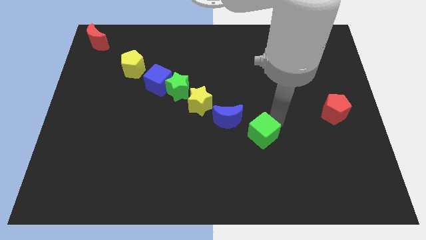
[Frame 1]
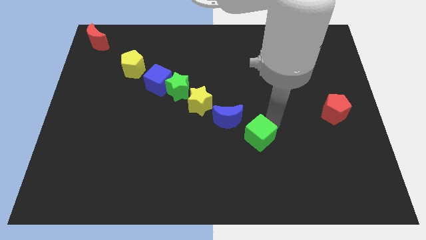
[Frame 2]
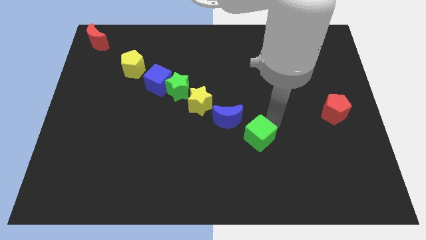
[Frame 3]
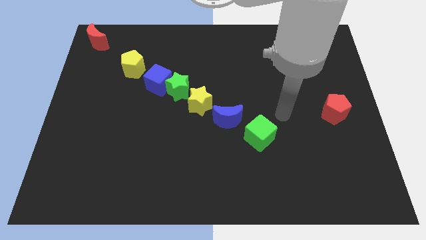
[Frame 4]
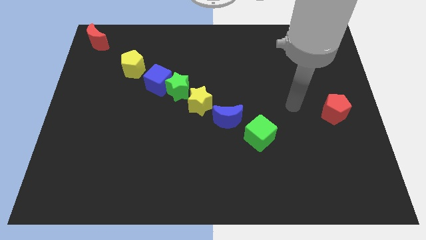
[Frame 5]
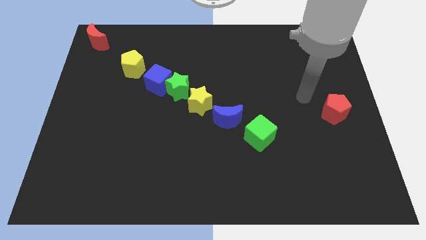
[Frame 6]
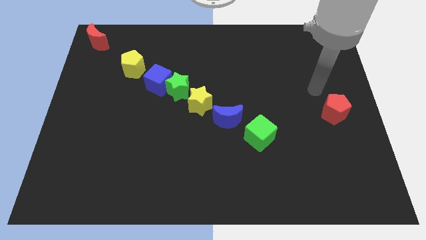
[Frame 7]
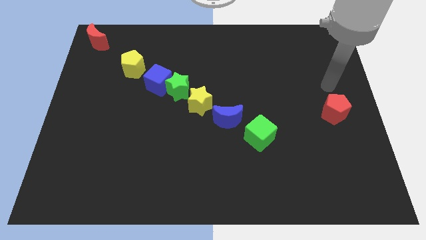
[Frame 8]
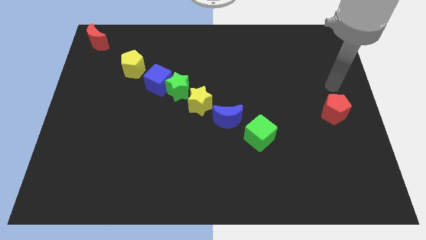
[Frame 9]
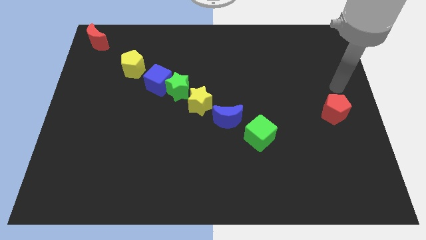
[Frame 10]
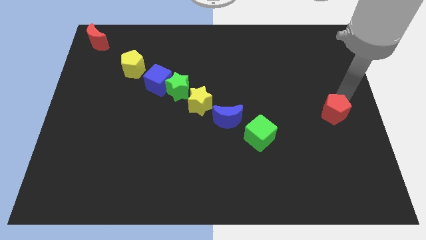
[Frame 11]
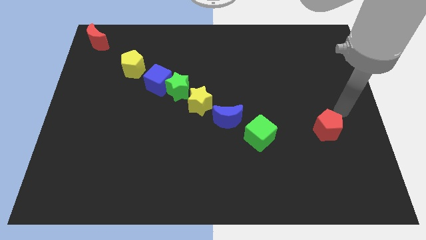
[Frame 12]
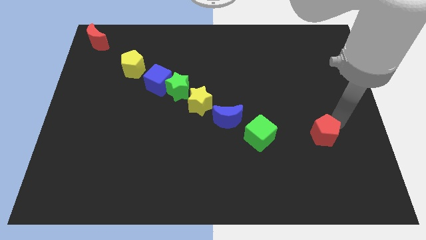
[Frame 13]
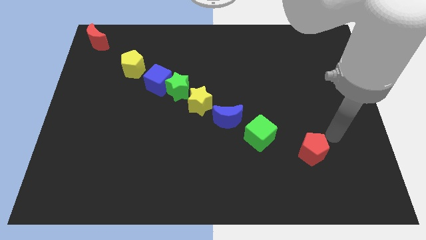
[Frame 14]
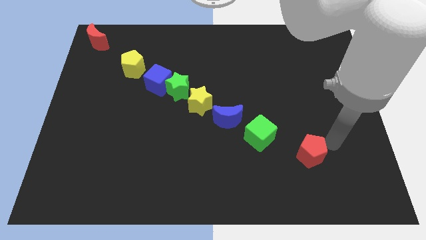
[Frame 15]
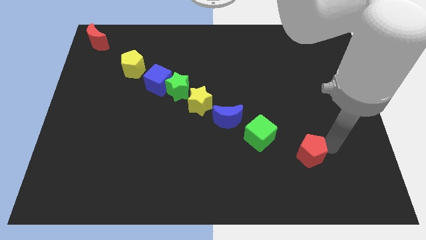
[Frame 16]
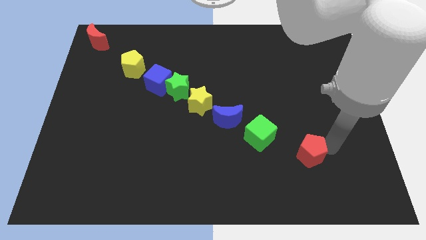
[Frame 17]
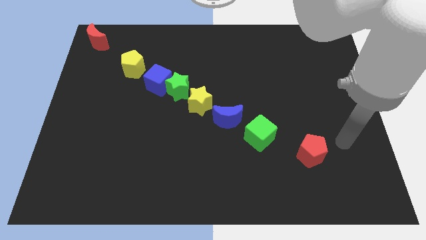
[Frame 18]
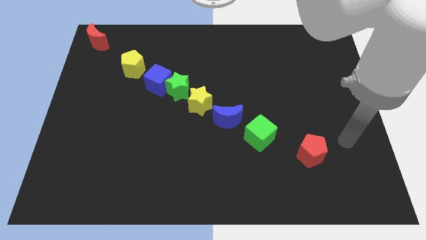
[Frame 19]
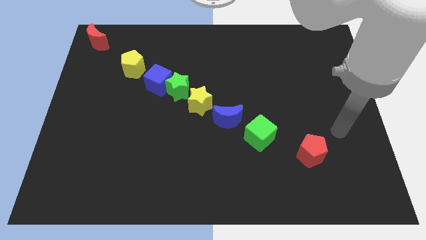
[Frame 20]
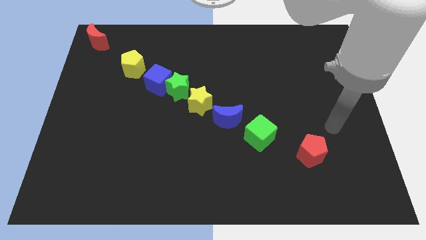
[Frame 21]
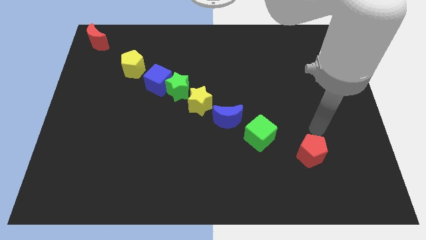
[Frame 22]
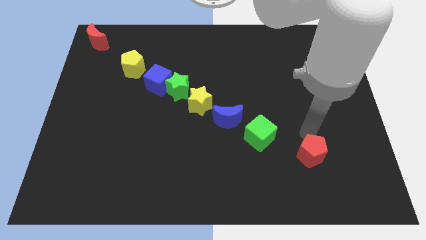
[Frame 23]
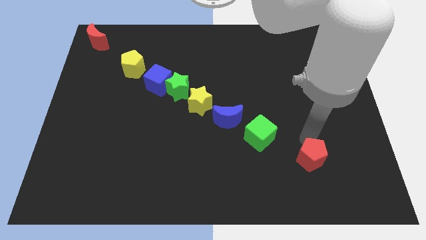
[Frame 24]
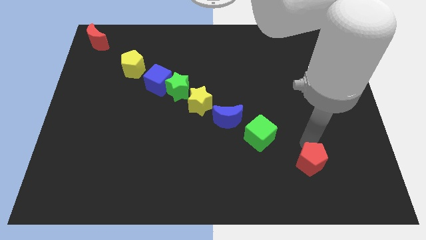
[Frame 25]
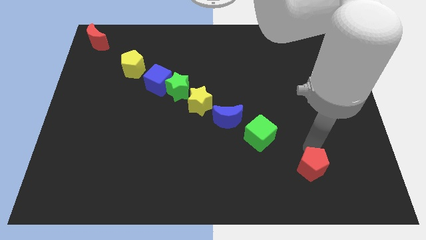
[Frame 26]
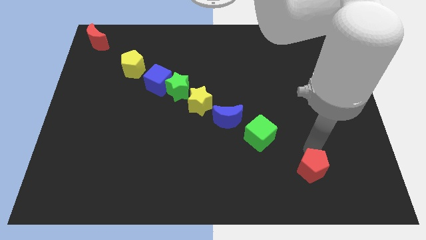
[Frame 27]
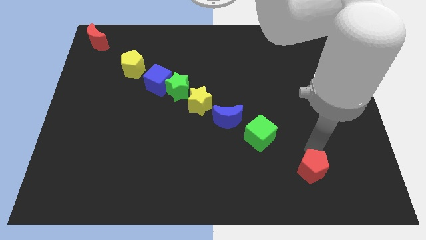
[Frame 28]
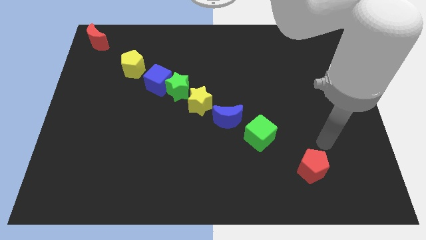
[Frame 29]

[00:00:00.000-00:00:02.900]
place the red pentagon in a vertically right side of green star

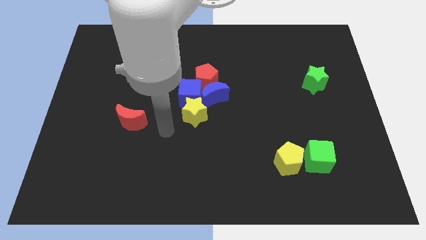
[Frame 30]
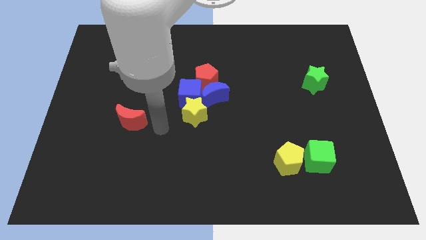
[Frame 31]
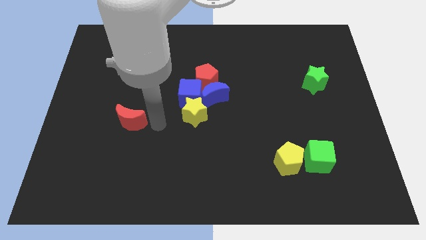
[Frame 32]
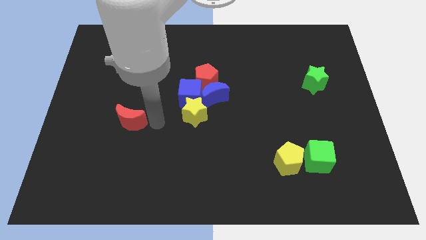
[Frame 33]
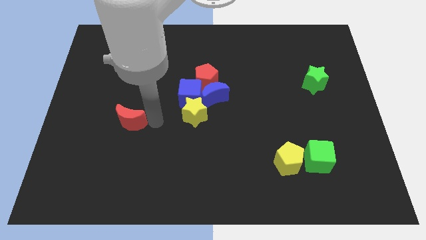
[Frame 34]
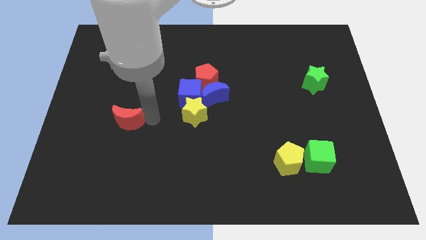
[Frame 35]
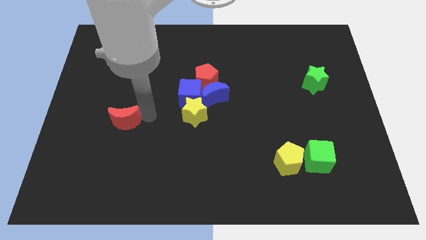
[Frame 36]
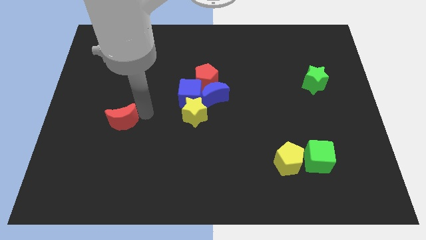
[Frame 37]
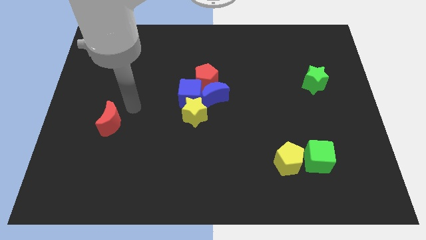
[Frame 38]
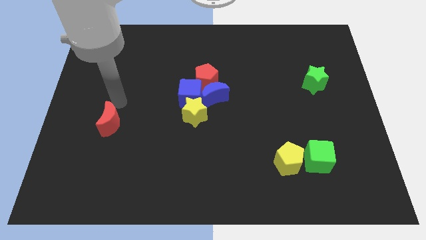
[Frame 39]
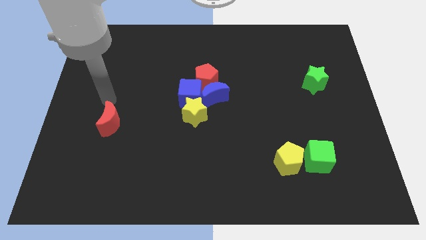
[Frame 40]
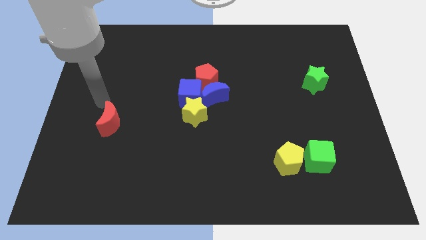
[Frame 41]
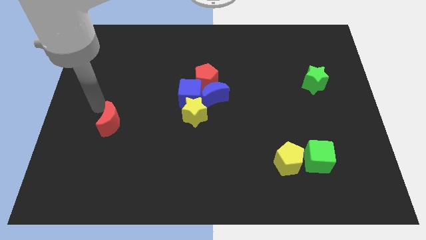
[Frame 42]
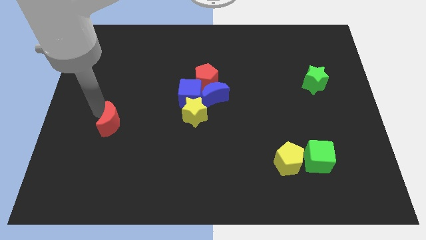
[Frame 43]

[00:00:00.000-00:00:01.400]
push the red crescent to the left

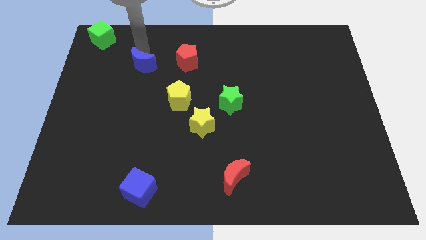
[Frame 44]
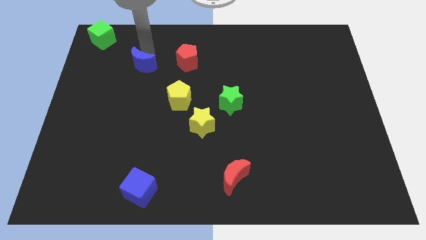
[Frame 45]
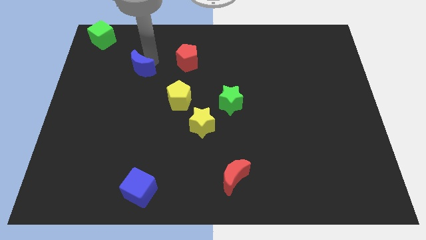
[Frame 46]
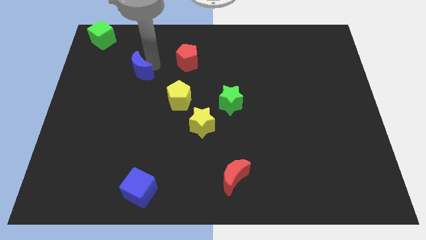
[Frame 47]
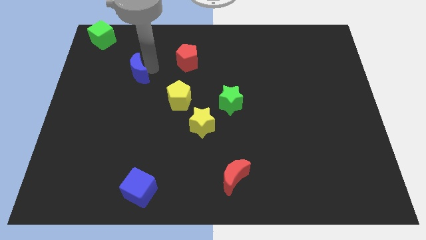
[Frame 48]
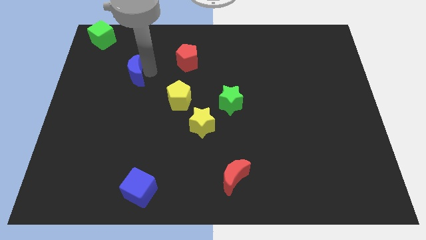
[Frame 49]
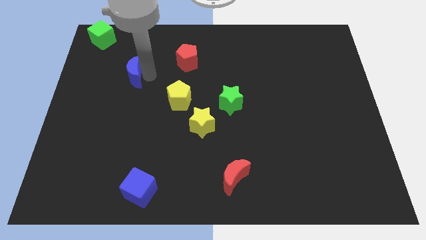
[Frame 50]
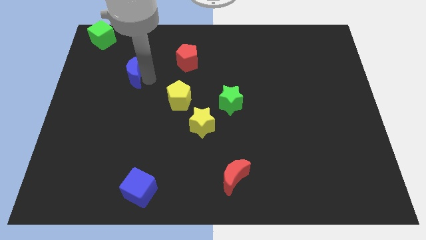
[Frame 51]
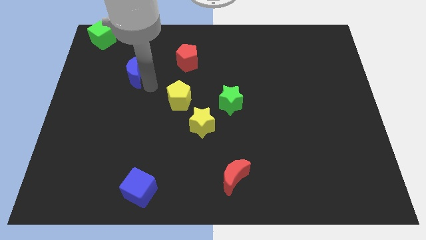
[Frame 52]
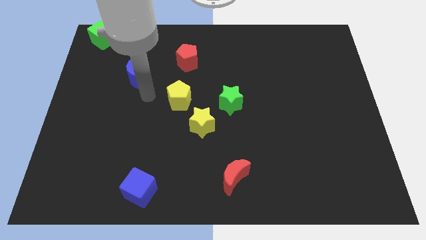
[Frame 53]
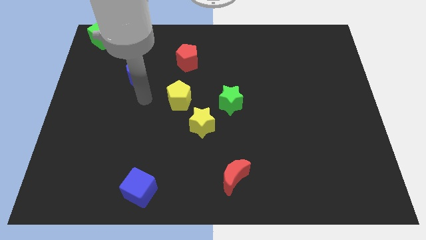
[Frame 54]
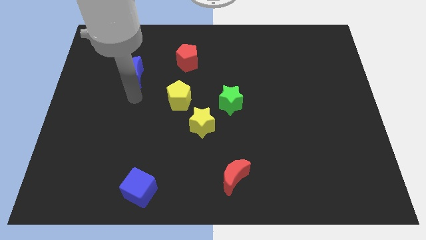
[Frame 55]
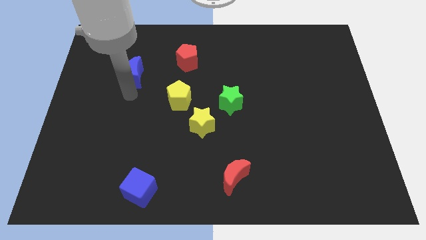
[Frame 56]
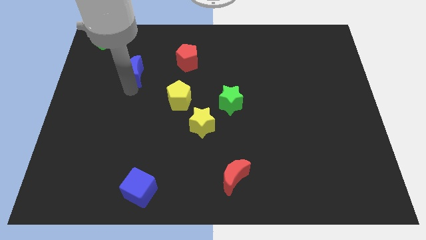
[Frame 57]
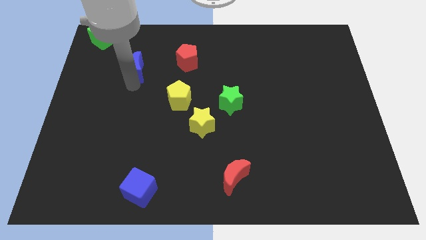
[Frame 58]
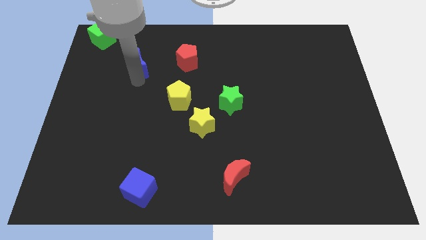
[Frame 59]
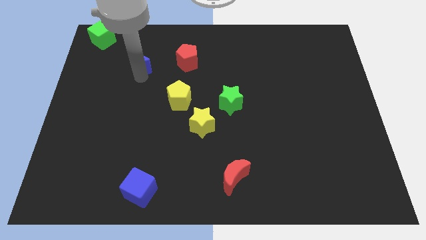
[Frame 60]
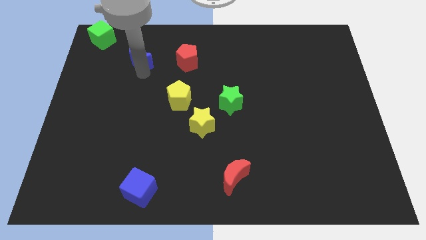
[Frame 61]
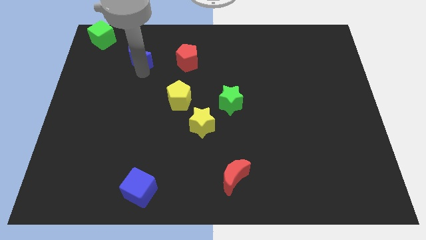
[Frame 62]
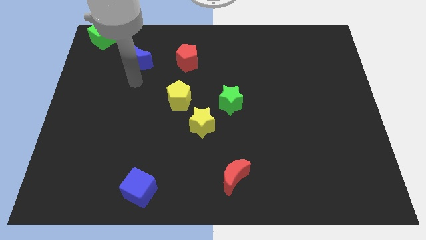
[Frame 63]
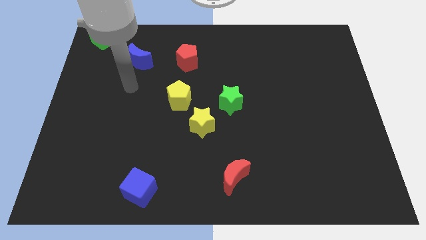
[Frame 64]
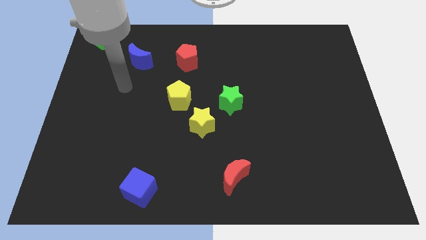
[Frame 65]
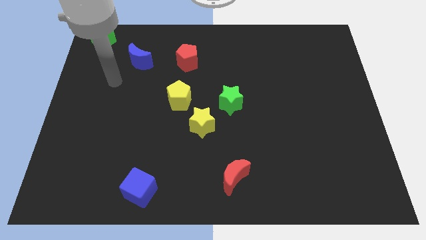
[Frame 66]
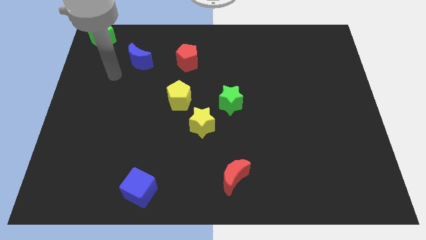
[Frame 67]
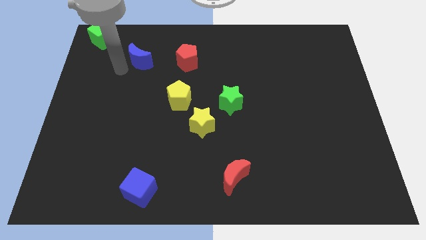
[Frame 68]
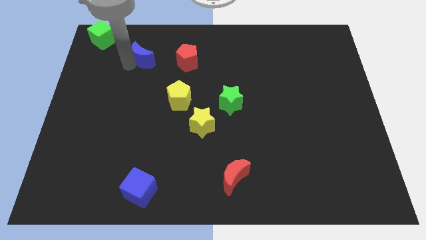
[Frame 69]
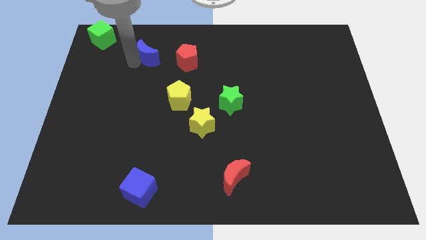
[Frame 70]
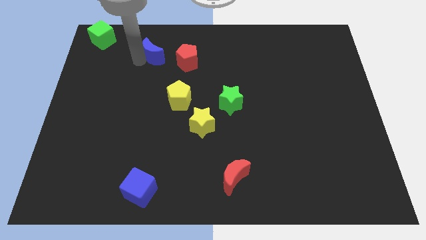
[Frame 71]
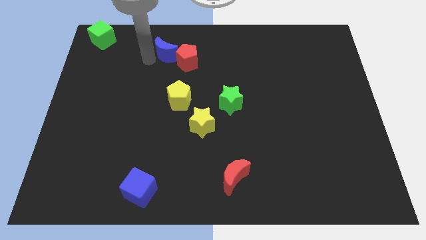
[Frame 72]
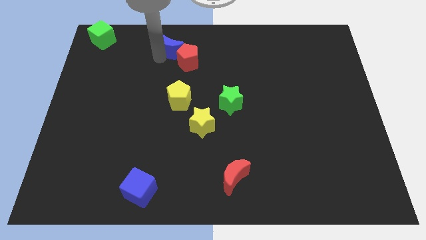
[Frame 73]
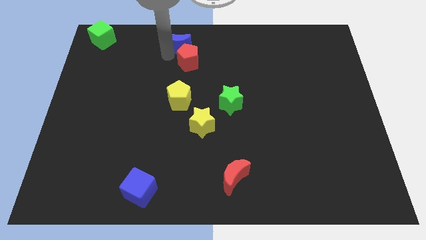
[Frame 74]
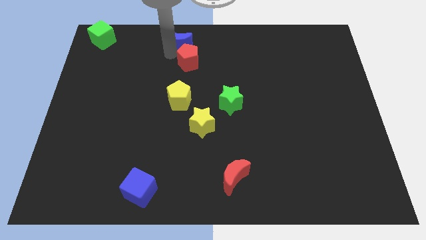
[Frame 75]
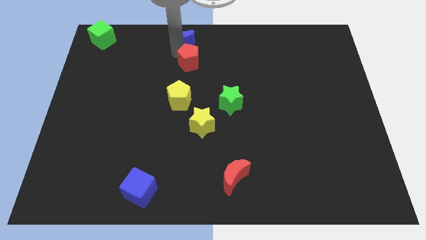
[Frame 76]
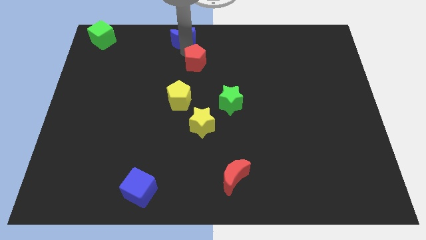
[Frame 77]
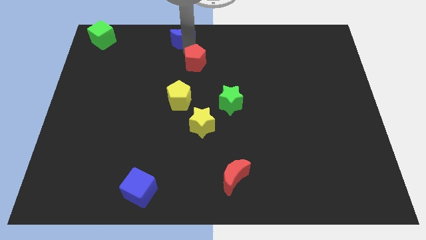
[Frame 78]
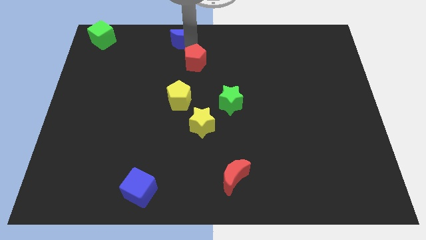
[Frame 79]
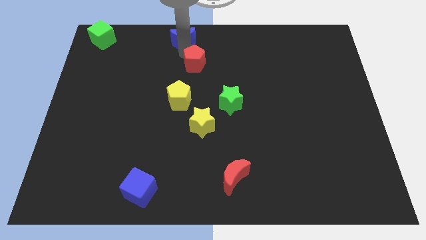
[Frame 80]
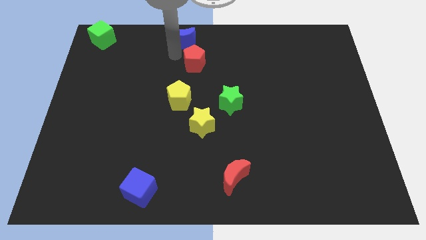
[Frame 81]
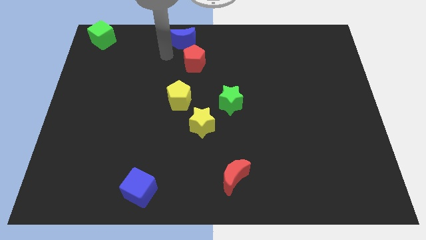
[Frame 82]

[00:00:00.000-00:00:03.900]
push the blue moon into the red pentagon

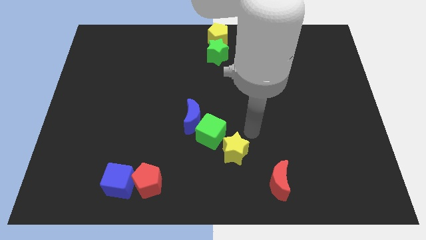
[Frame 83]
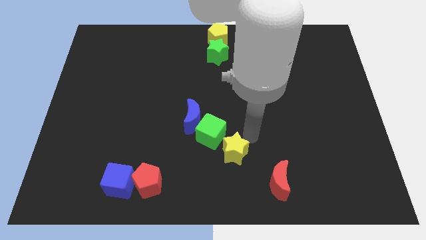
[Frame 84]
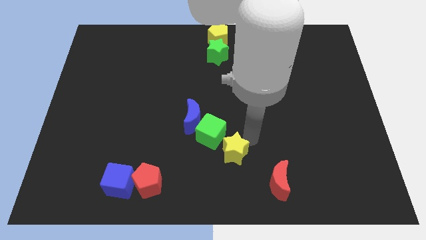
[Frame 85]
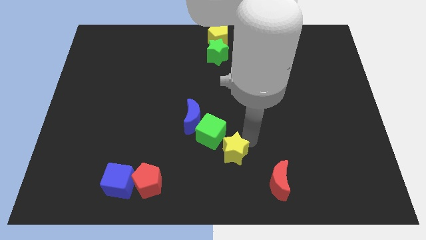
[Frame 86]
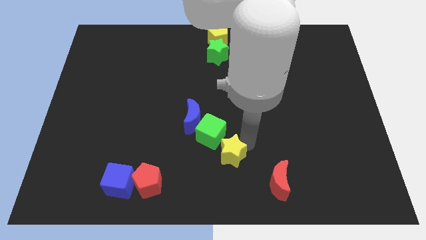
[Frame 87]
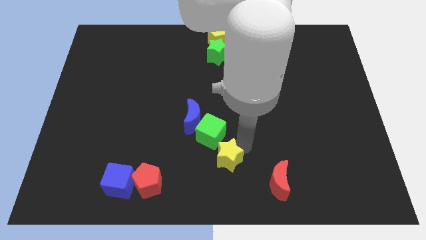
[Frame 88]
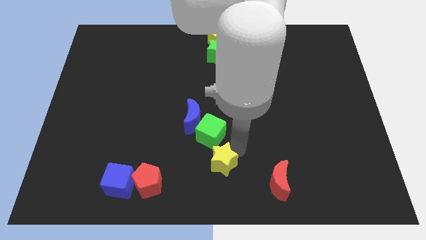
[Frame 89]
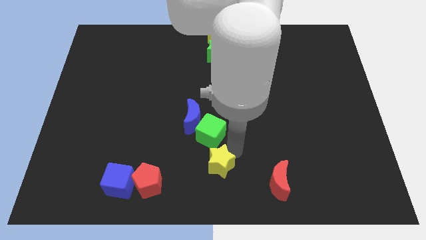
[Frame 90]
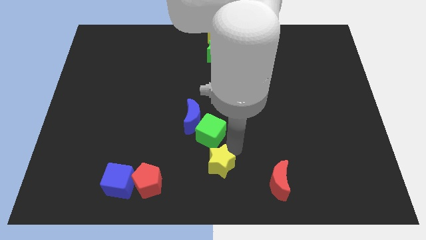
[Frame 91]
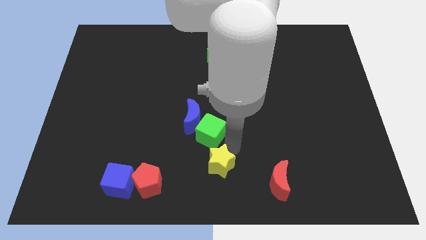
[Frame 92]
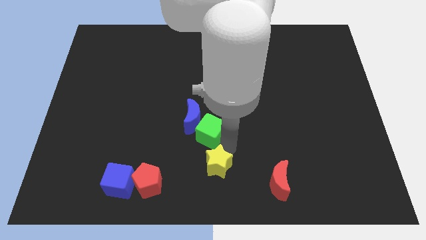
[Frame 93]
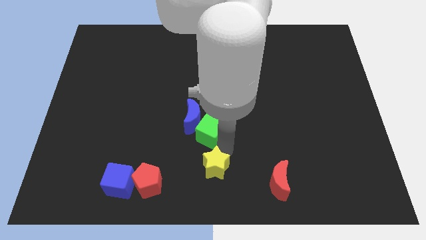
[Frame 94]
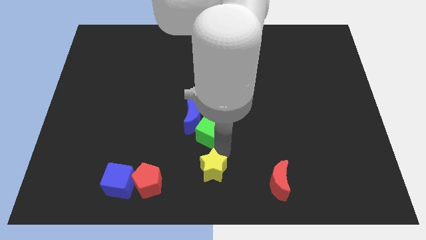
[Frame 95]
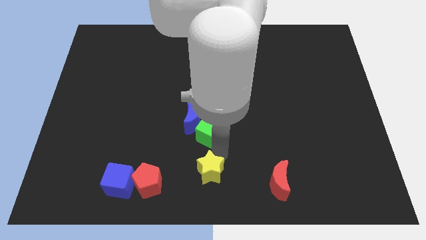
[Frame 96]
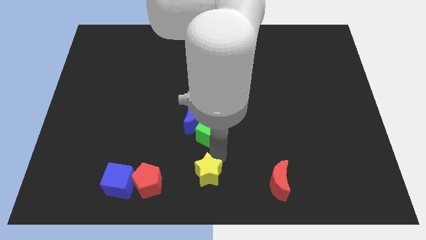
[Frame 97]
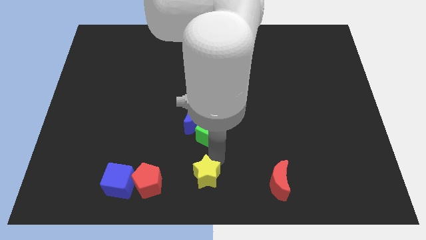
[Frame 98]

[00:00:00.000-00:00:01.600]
move the yellow star down to the green cube
